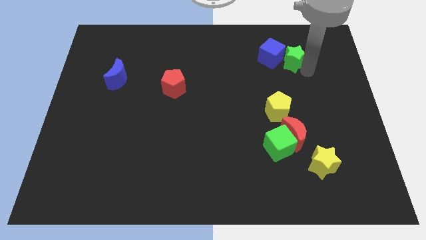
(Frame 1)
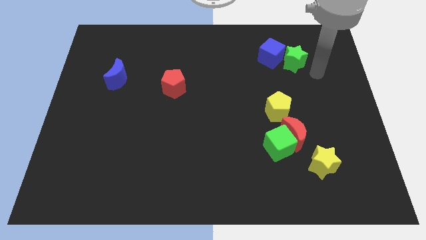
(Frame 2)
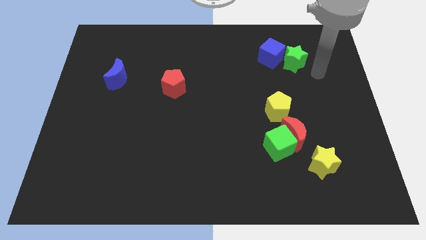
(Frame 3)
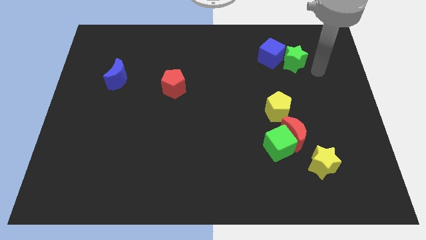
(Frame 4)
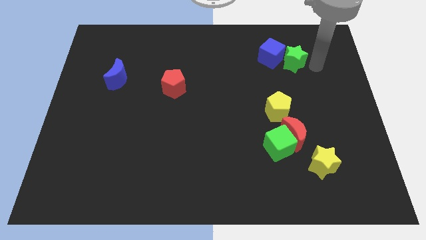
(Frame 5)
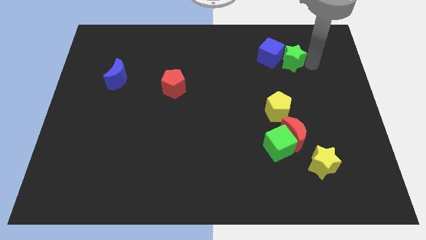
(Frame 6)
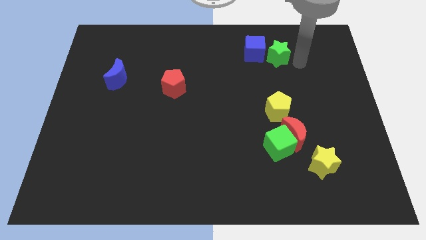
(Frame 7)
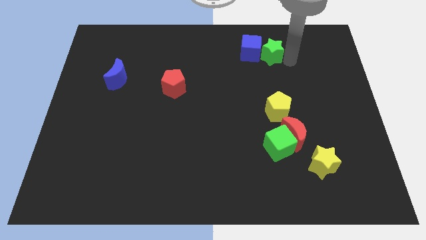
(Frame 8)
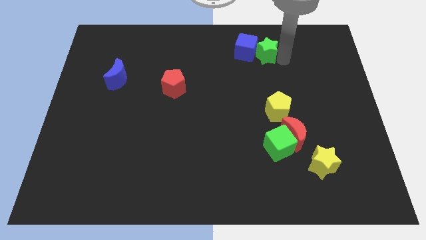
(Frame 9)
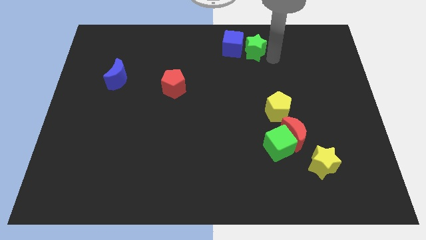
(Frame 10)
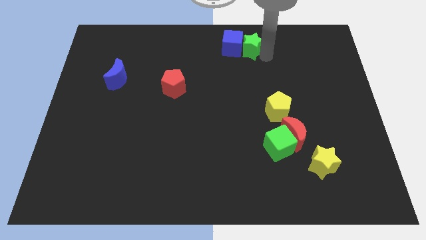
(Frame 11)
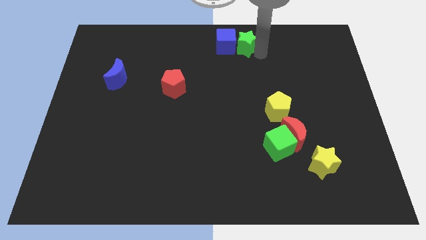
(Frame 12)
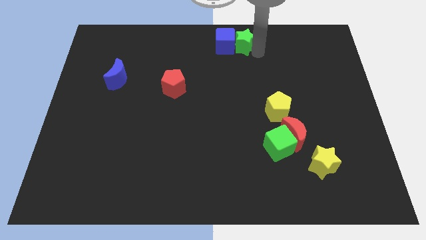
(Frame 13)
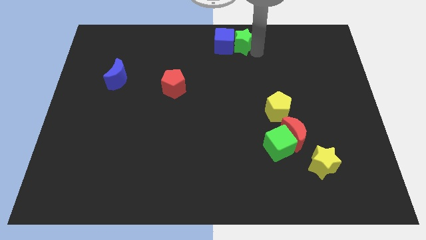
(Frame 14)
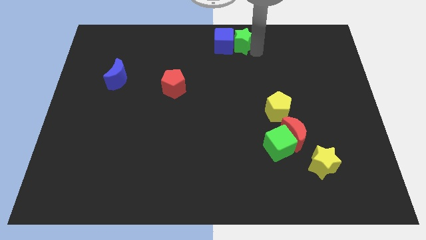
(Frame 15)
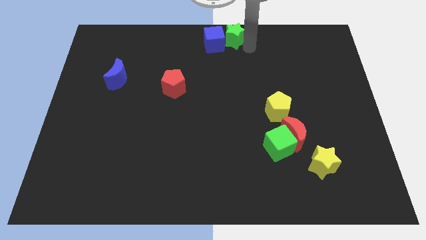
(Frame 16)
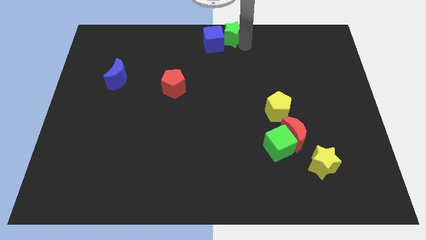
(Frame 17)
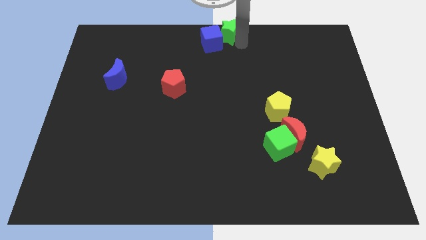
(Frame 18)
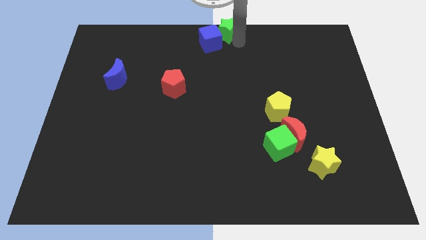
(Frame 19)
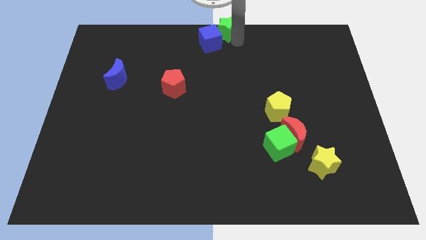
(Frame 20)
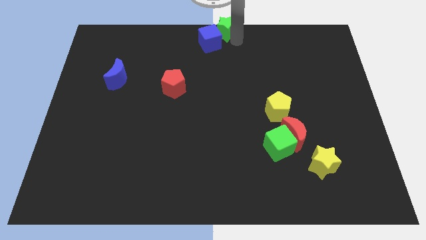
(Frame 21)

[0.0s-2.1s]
push the green star along with blue cube to the top center

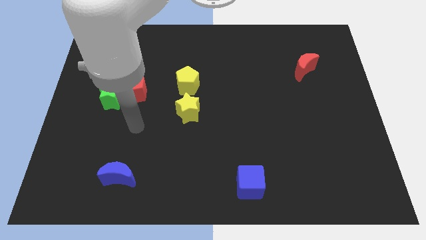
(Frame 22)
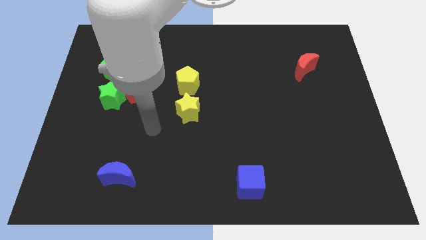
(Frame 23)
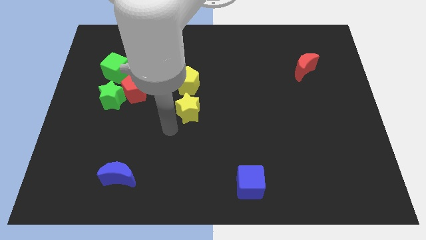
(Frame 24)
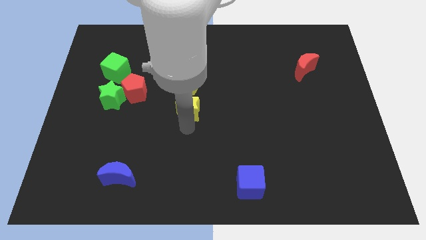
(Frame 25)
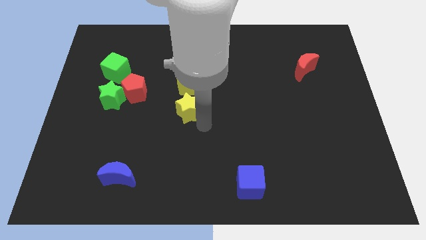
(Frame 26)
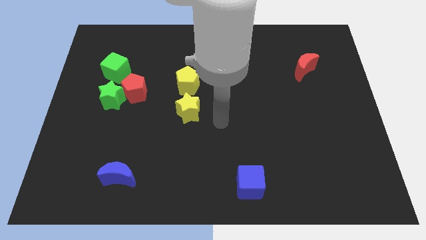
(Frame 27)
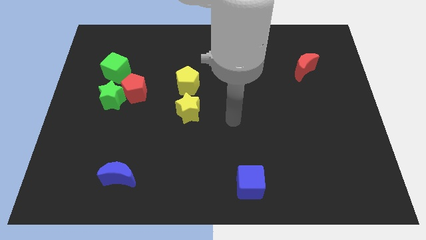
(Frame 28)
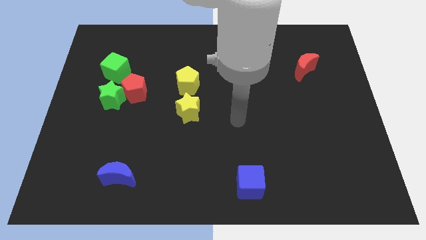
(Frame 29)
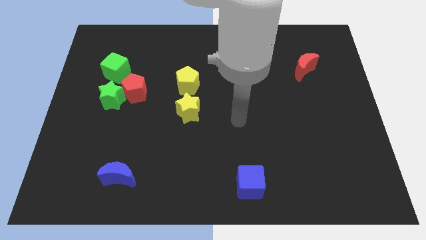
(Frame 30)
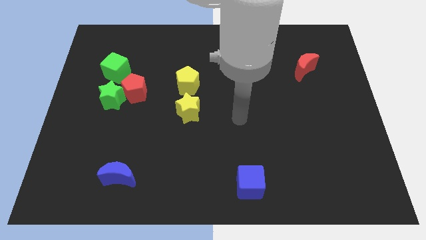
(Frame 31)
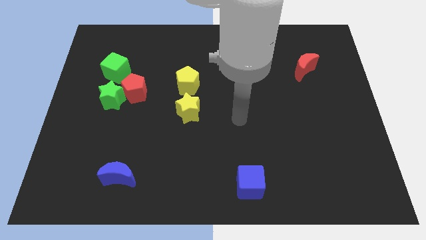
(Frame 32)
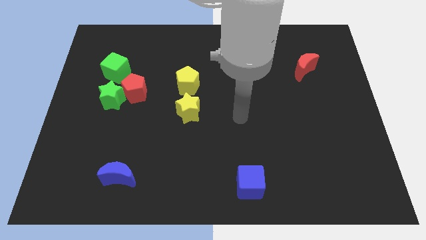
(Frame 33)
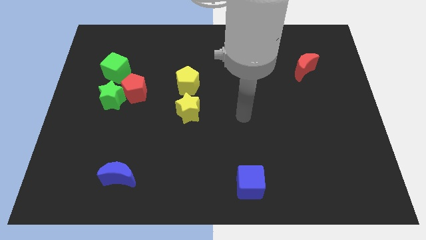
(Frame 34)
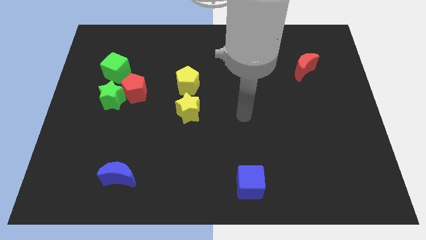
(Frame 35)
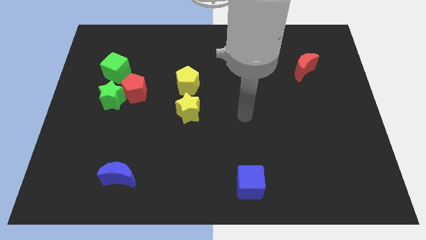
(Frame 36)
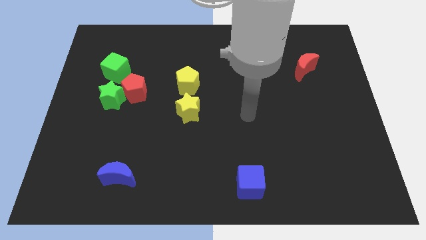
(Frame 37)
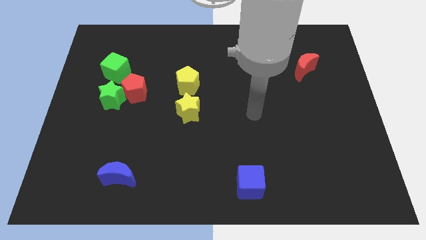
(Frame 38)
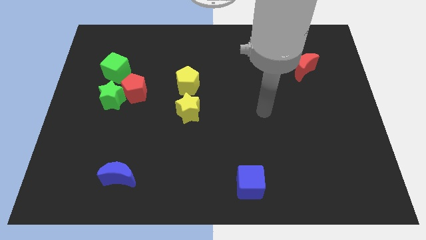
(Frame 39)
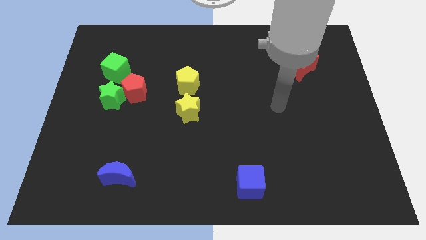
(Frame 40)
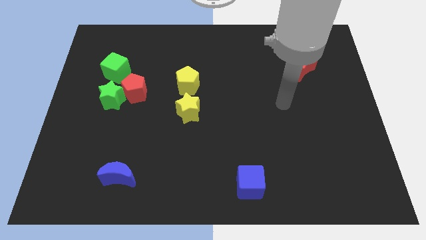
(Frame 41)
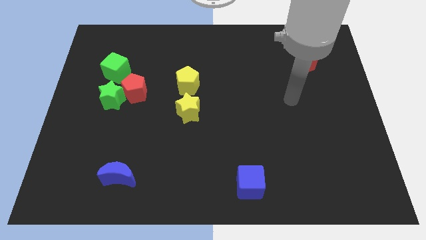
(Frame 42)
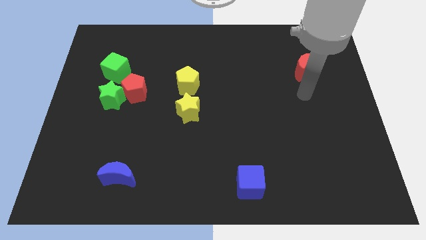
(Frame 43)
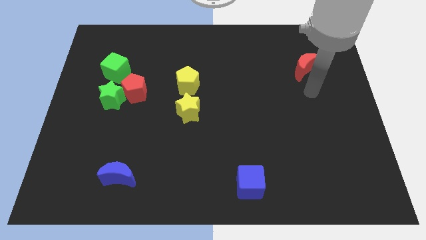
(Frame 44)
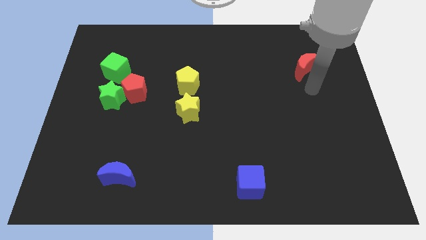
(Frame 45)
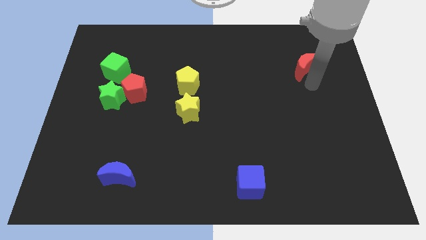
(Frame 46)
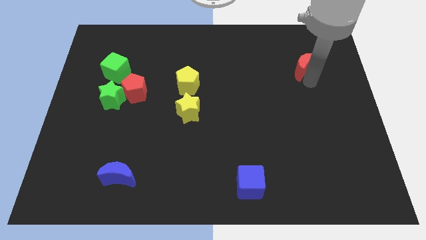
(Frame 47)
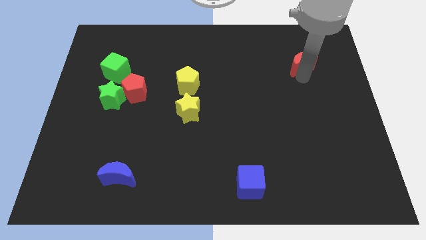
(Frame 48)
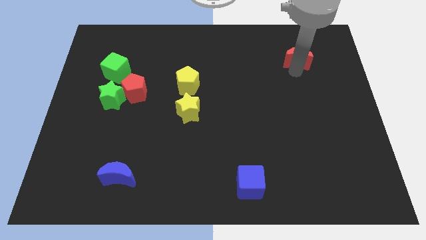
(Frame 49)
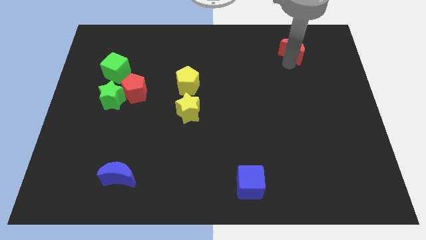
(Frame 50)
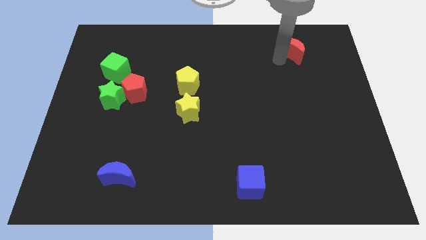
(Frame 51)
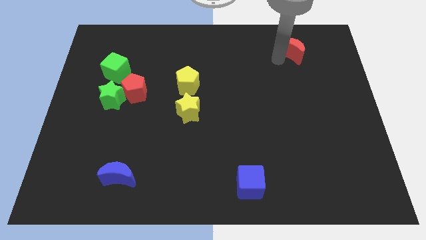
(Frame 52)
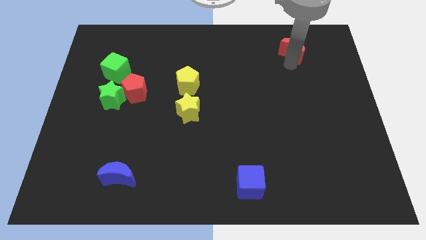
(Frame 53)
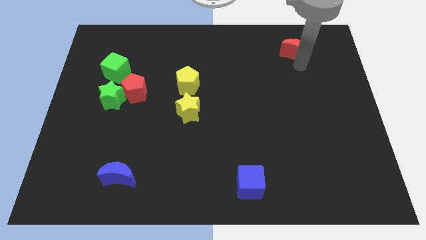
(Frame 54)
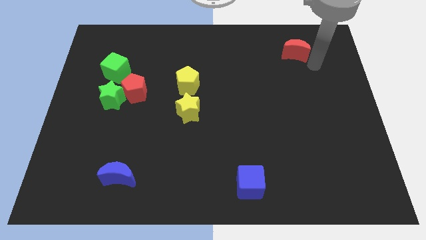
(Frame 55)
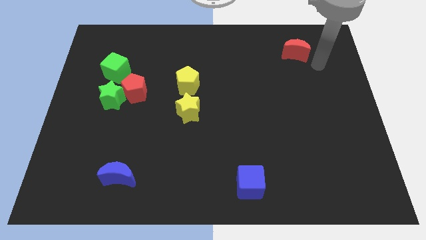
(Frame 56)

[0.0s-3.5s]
push the red moon slightly upward

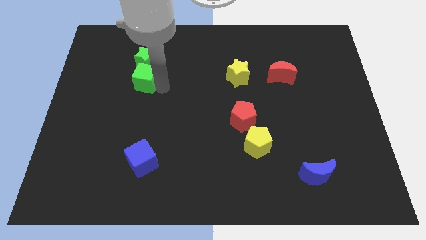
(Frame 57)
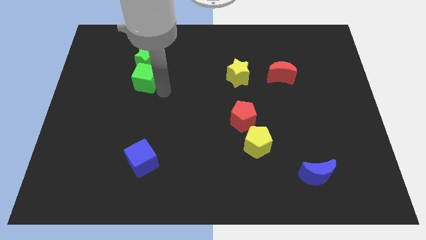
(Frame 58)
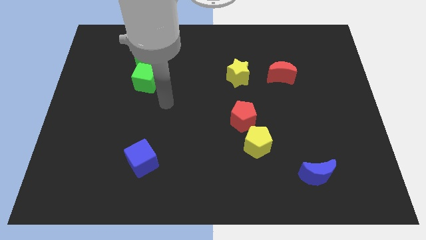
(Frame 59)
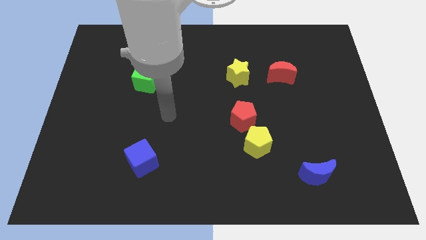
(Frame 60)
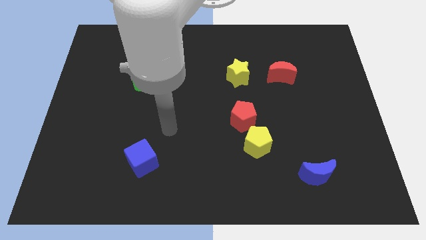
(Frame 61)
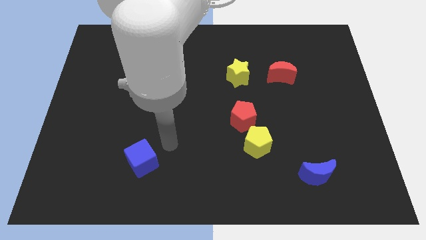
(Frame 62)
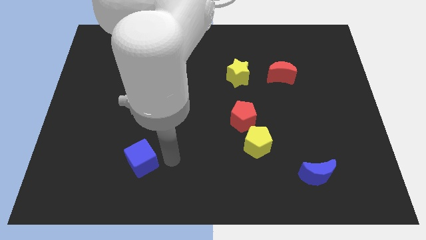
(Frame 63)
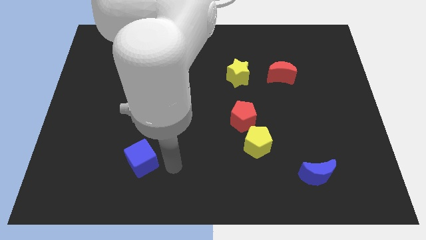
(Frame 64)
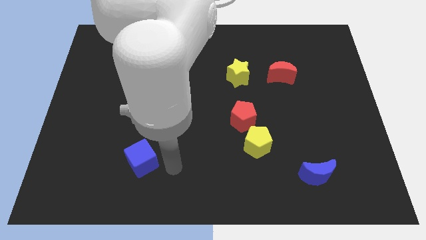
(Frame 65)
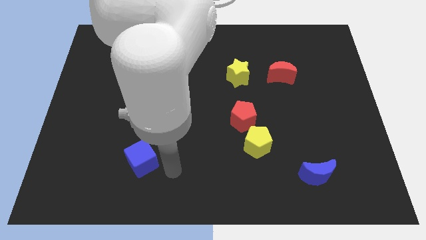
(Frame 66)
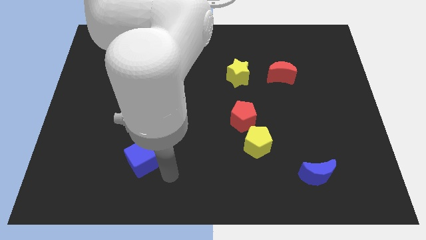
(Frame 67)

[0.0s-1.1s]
place your arm to the right of blue cube

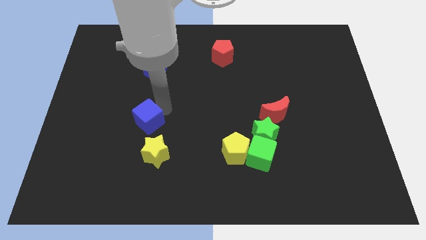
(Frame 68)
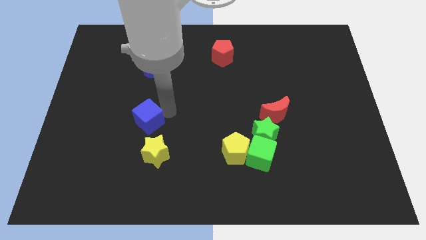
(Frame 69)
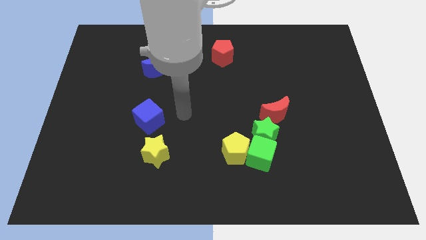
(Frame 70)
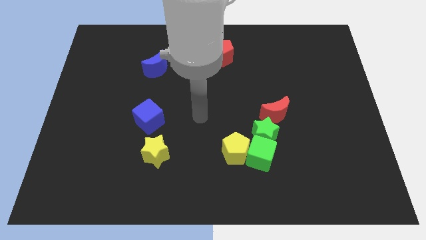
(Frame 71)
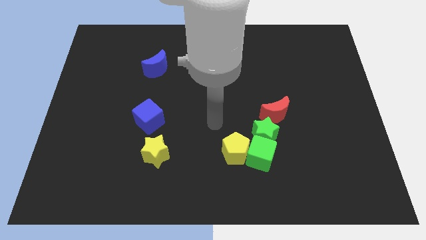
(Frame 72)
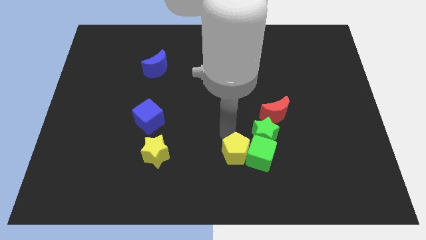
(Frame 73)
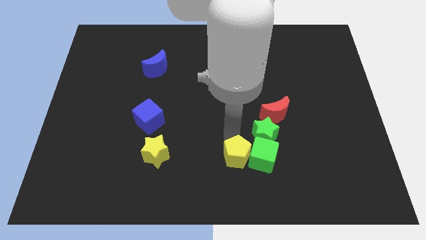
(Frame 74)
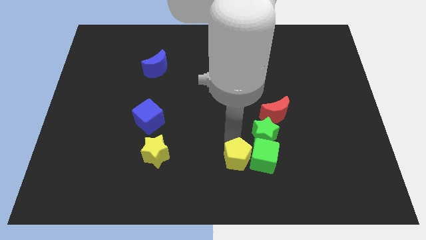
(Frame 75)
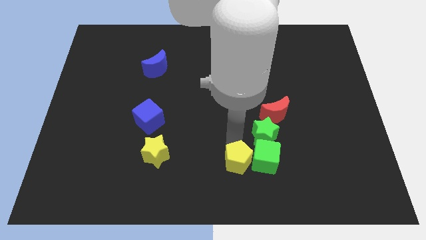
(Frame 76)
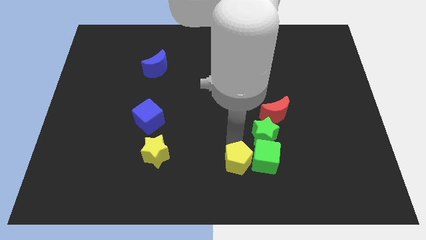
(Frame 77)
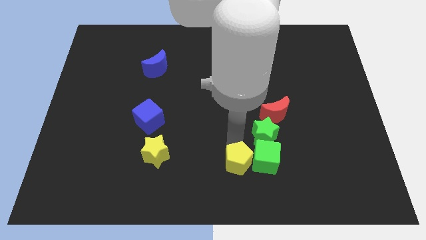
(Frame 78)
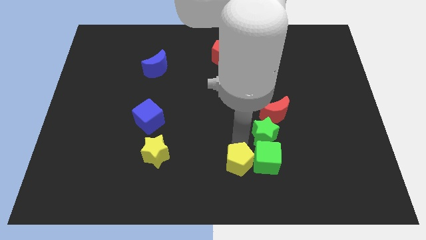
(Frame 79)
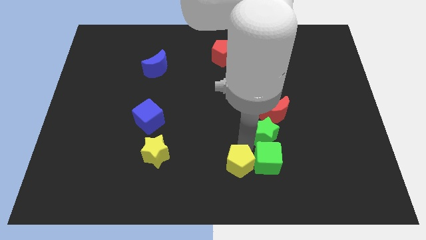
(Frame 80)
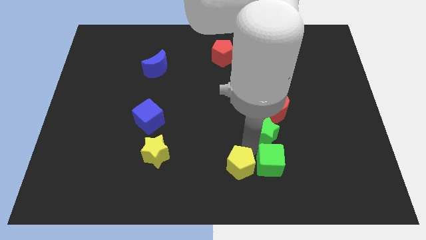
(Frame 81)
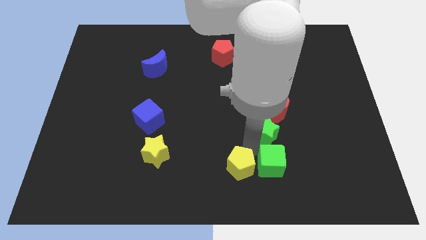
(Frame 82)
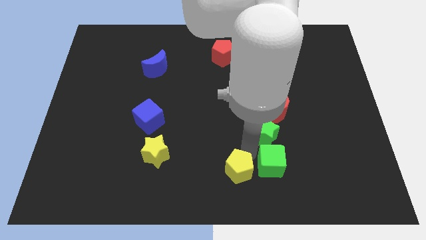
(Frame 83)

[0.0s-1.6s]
move the yellow pentagon slightly to the bottom

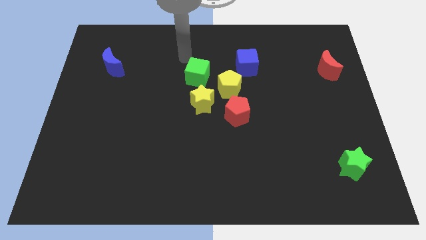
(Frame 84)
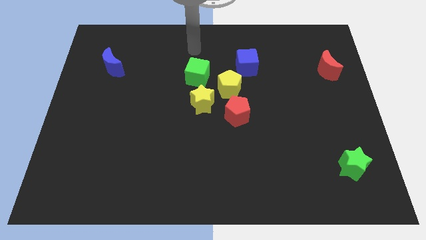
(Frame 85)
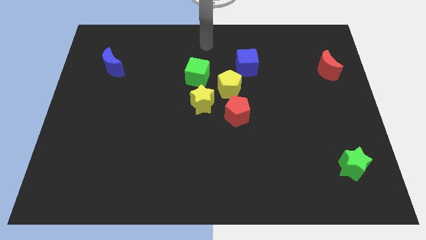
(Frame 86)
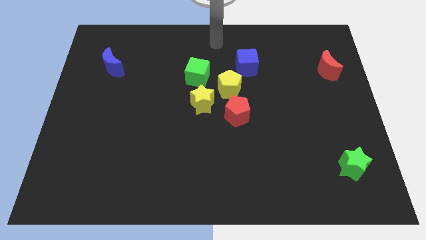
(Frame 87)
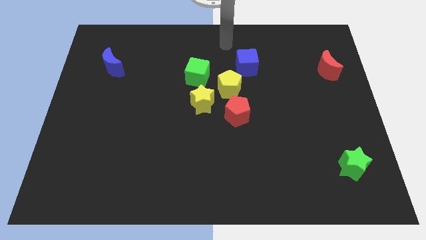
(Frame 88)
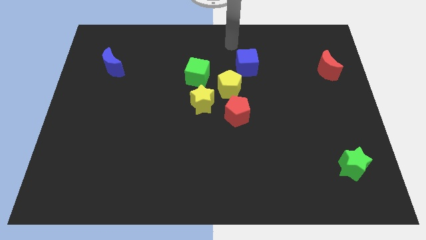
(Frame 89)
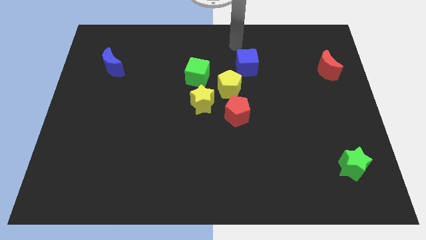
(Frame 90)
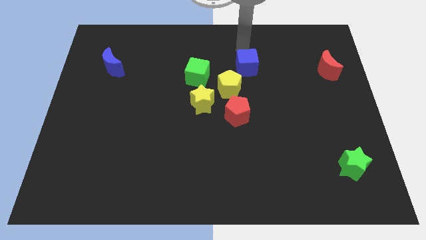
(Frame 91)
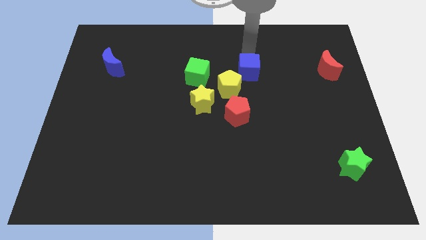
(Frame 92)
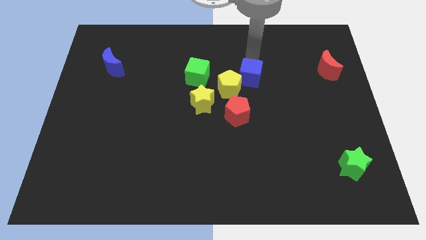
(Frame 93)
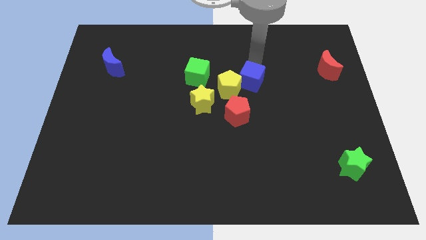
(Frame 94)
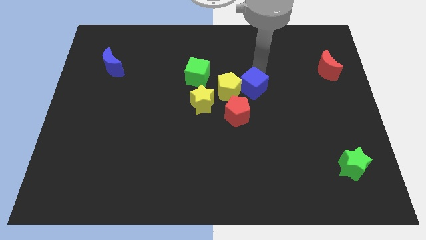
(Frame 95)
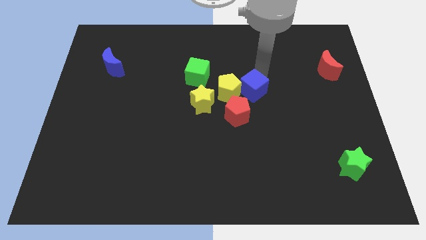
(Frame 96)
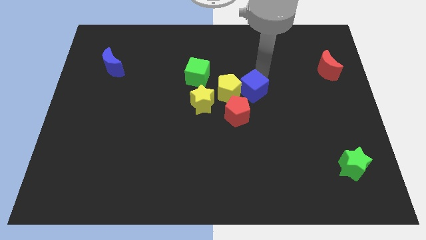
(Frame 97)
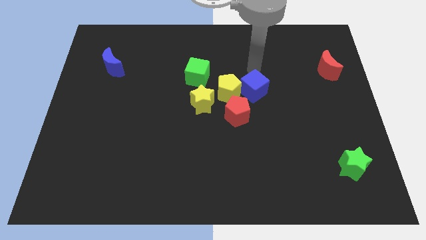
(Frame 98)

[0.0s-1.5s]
push the blue cube to the right of the yellow pentagon
